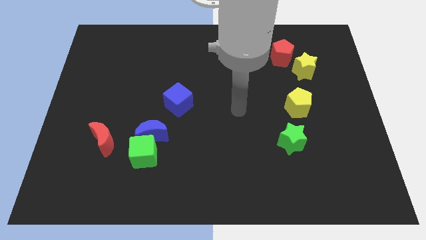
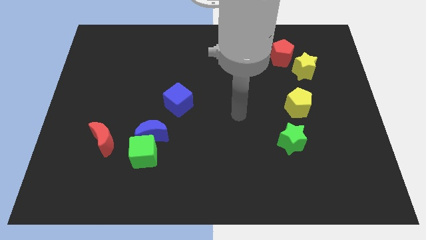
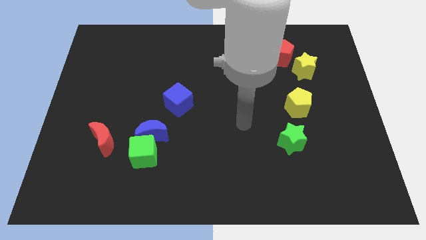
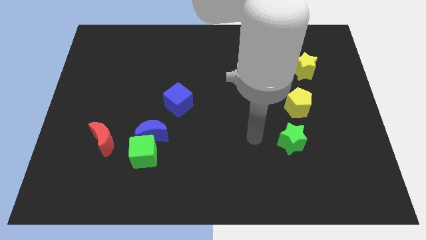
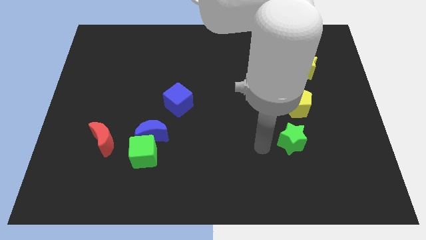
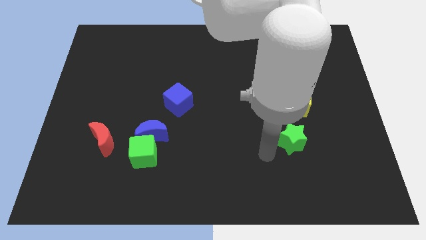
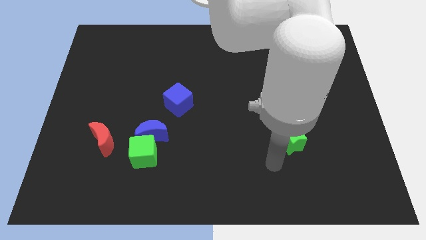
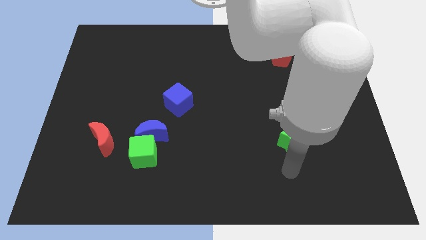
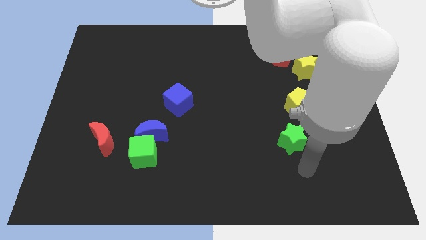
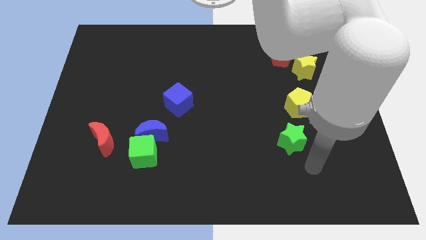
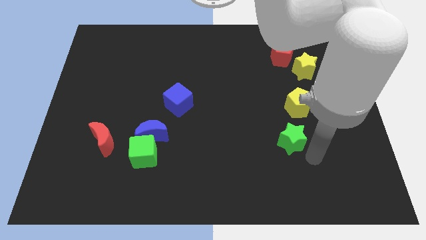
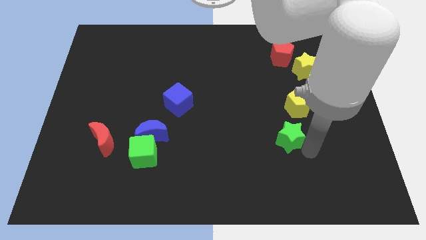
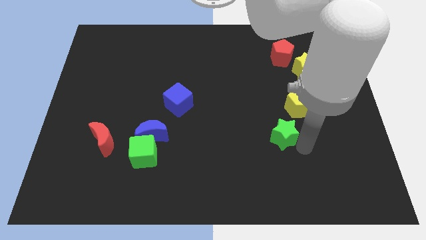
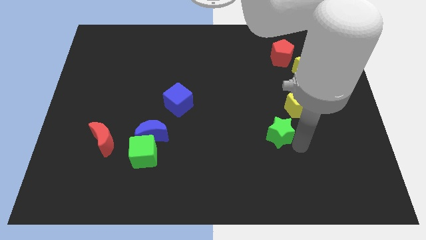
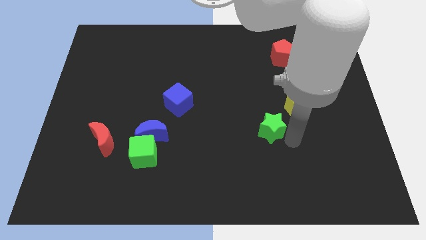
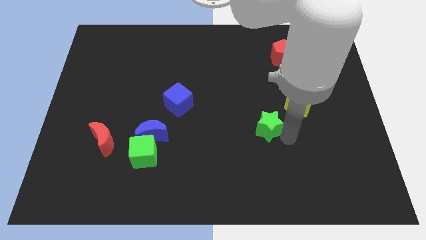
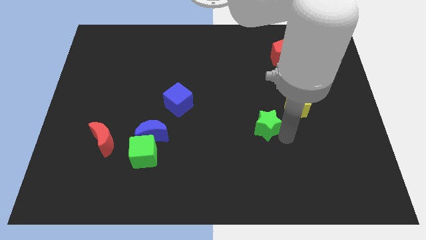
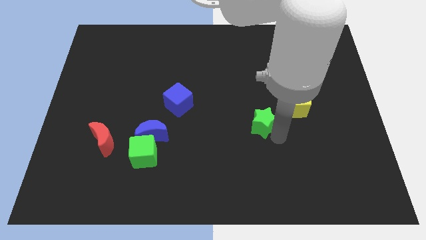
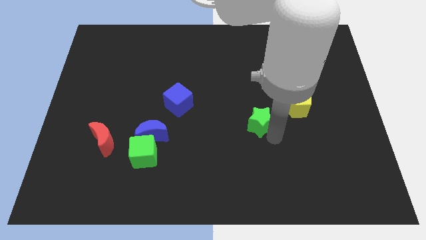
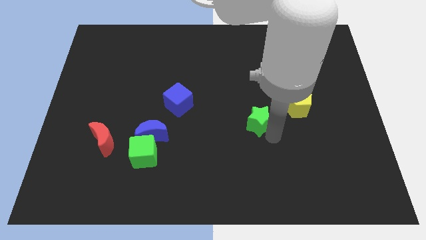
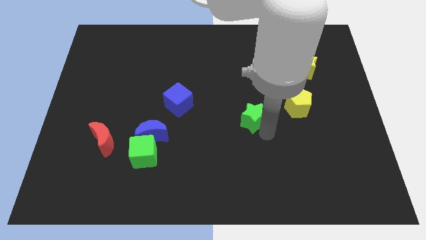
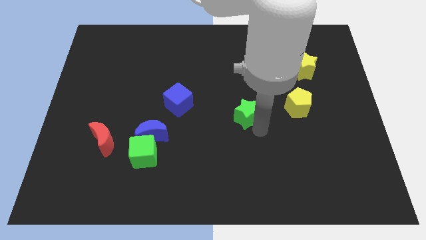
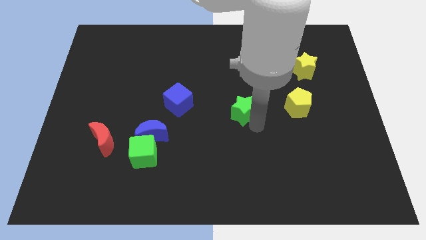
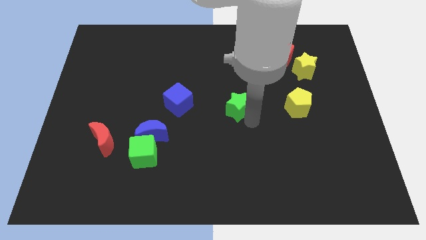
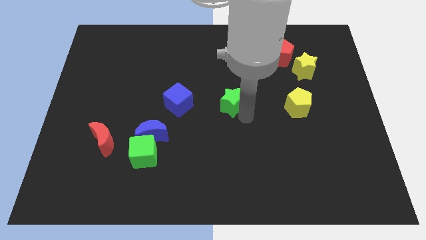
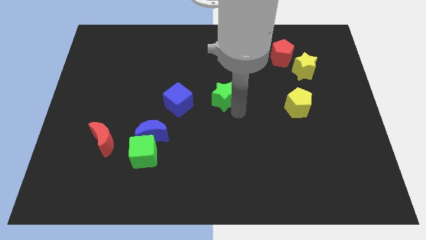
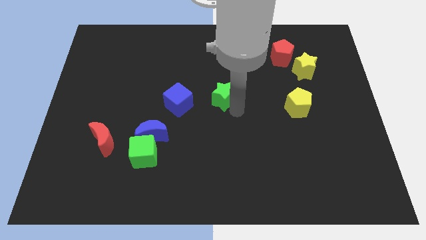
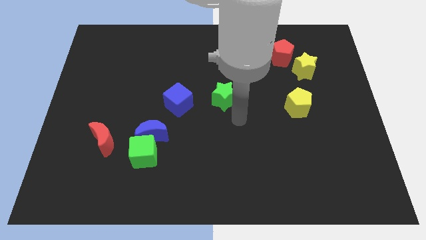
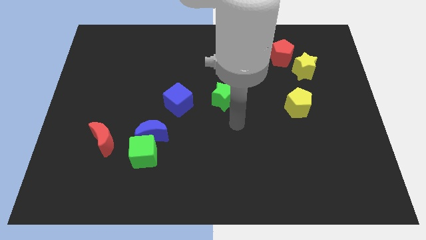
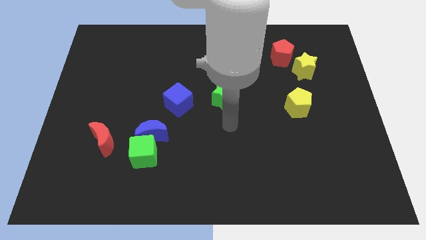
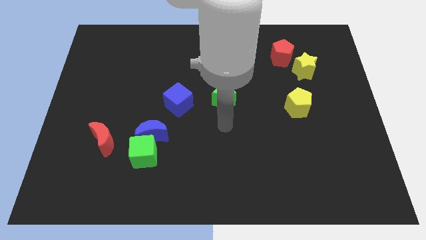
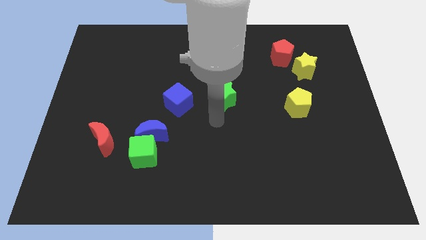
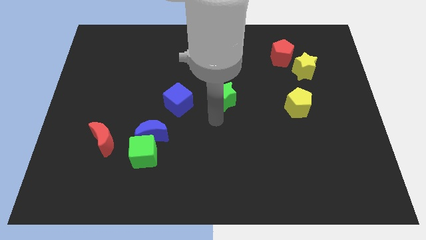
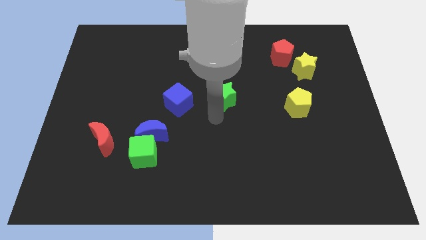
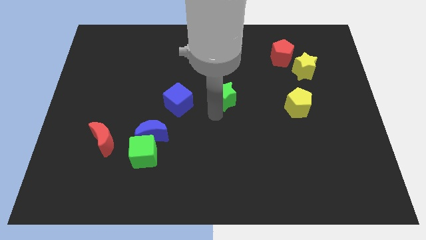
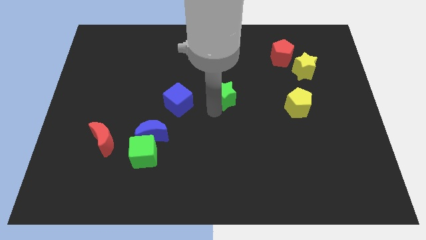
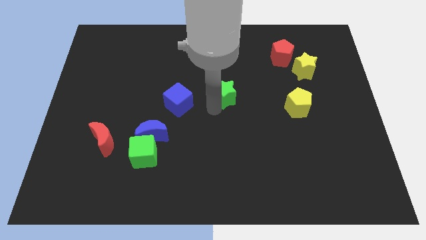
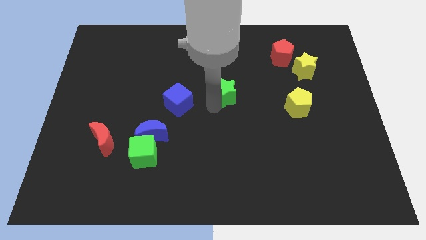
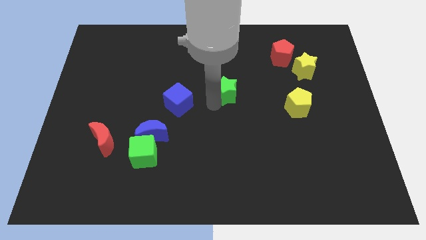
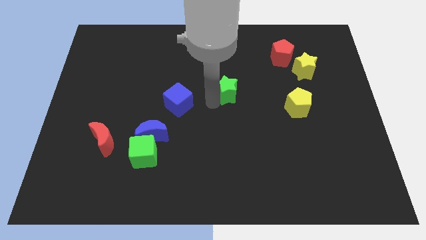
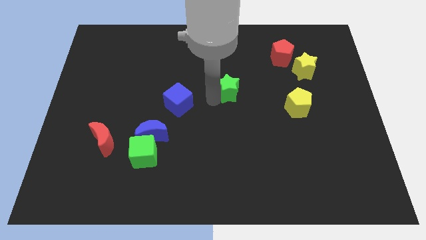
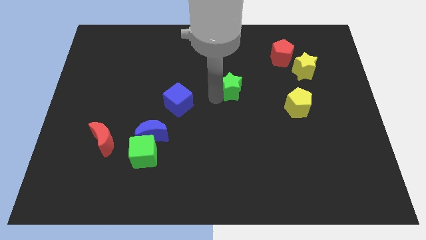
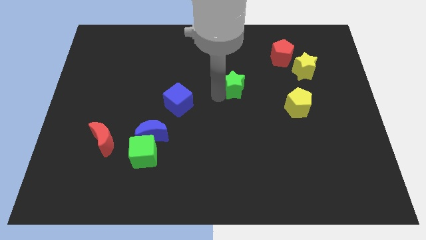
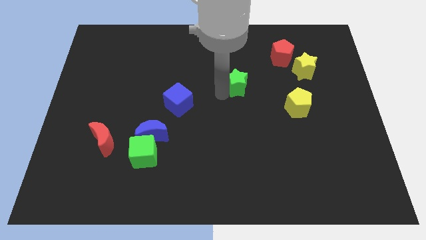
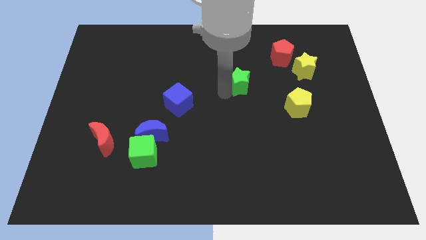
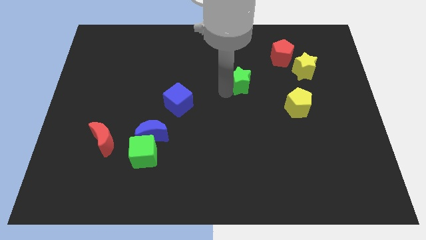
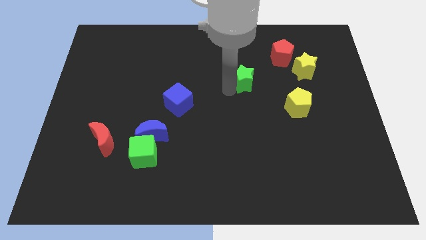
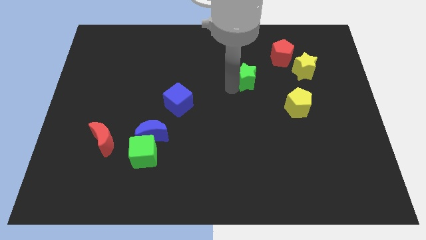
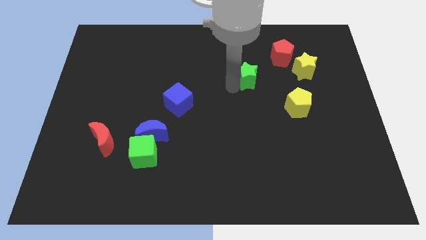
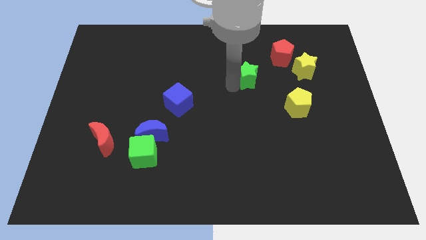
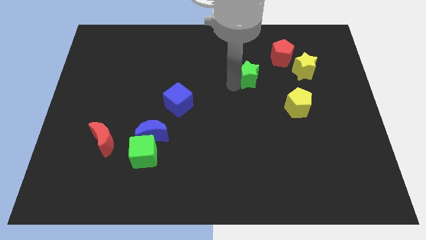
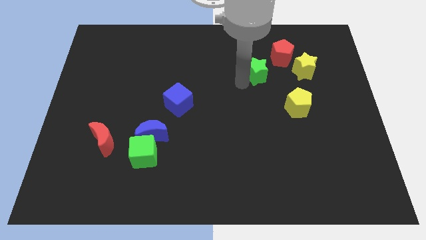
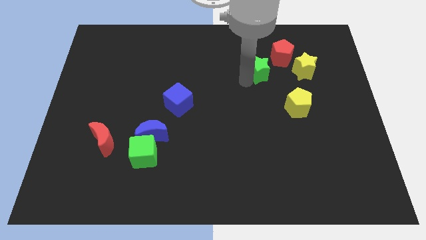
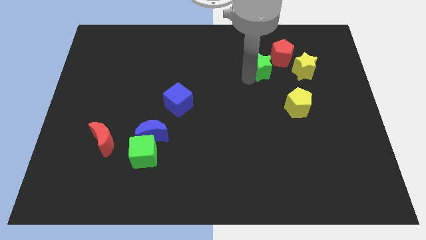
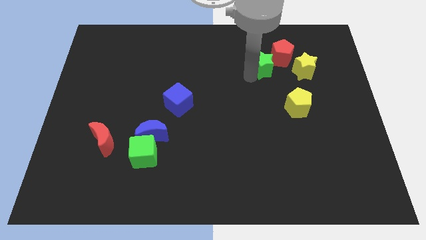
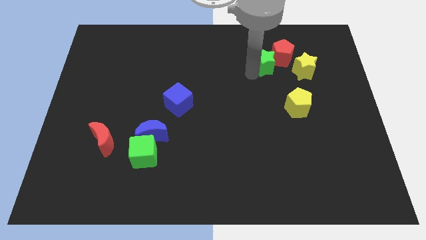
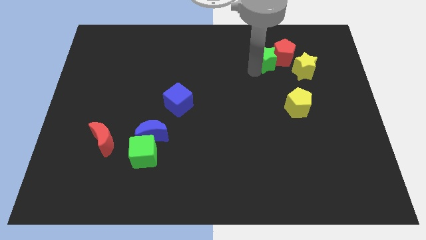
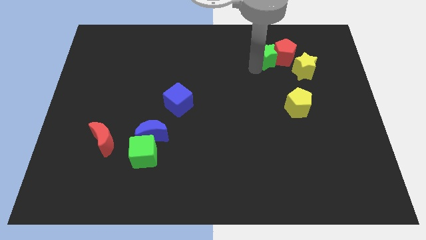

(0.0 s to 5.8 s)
slide the green star next to the red pentagon

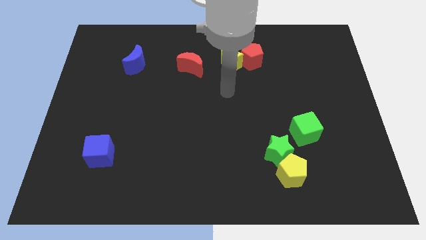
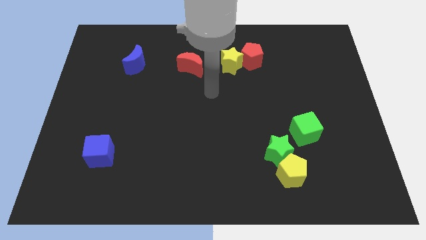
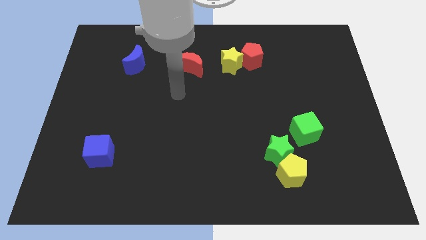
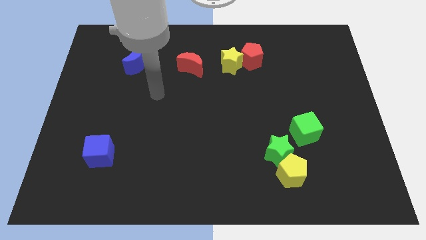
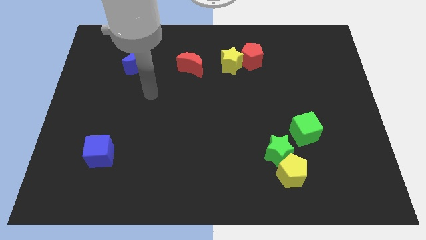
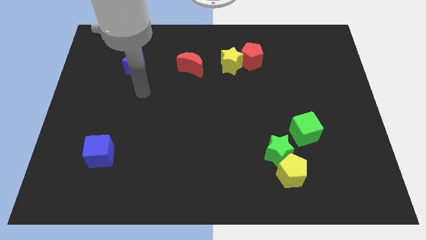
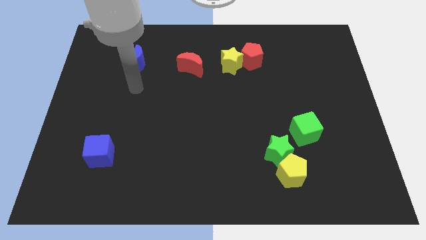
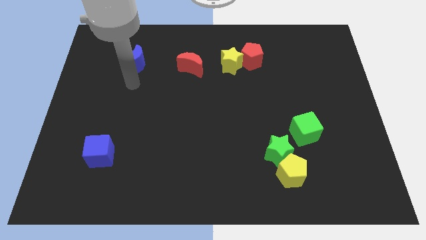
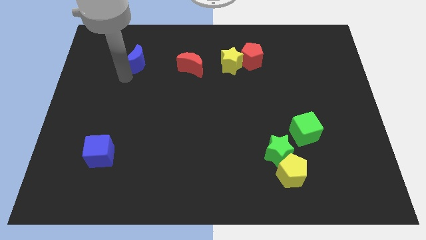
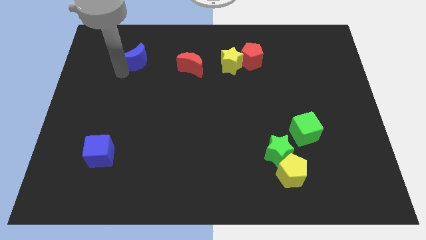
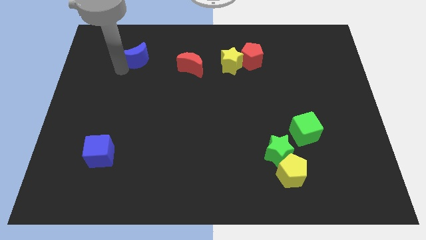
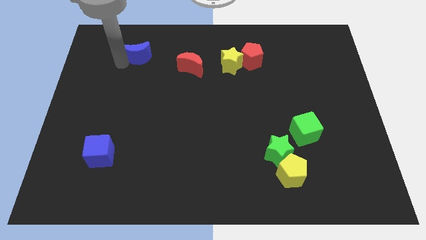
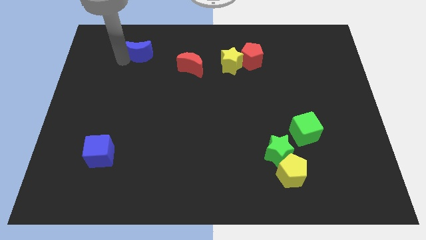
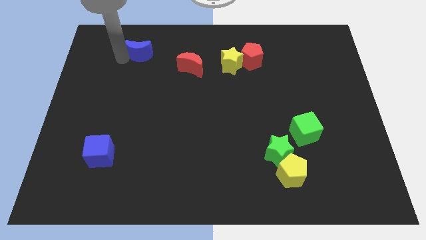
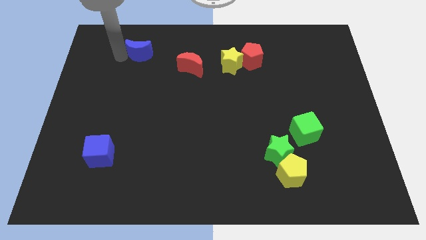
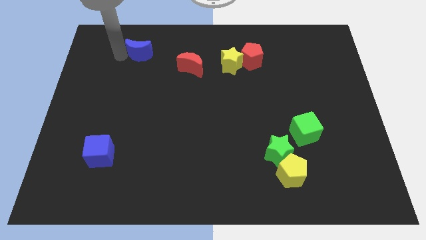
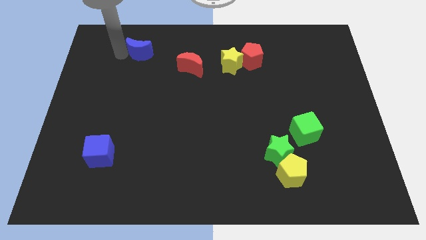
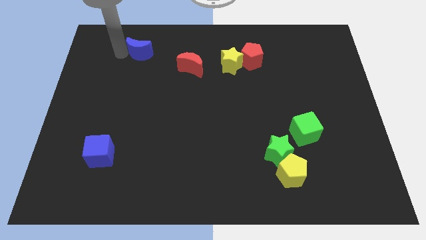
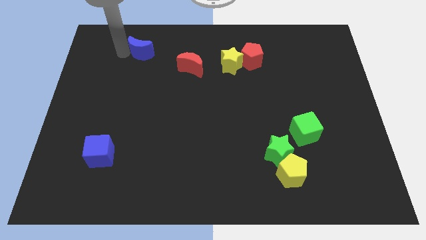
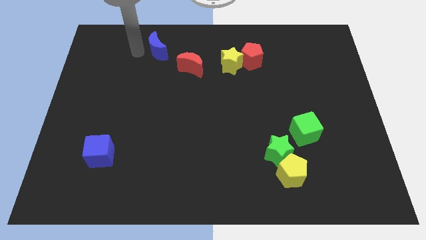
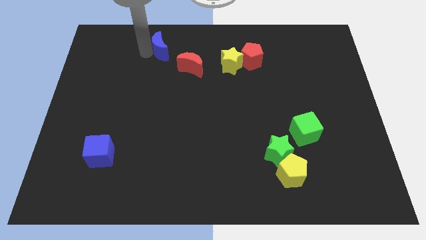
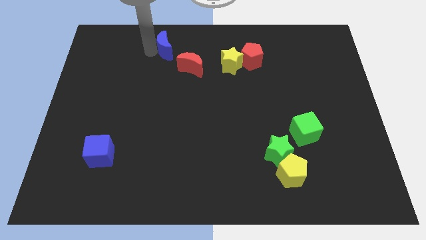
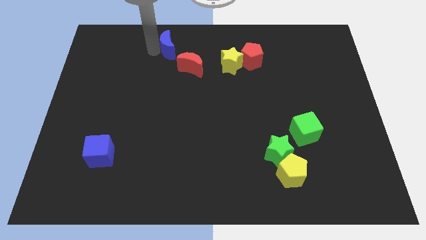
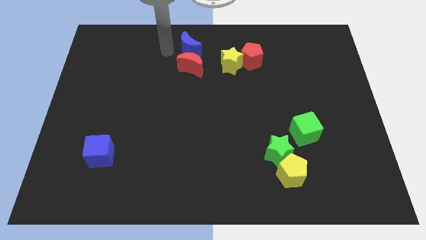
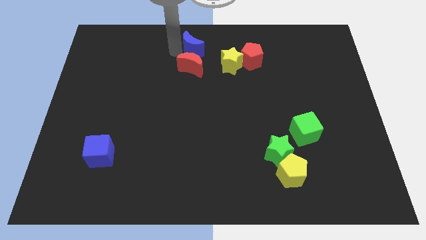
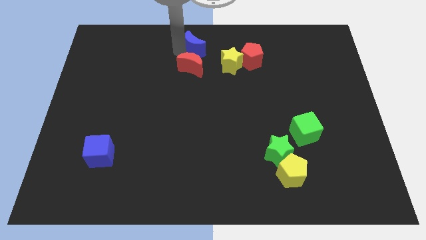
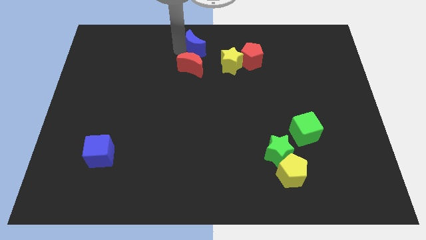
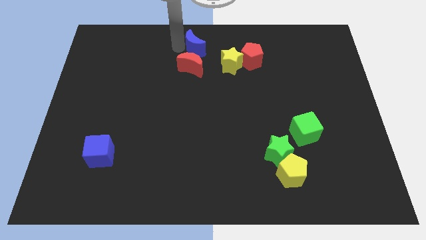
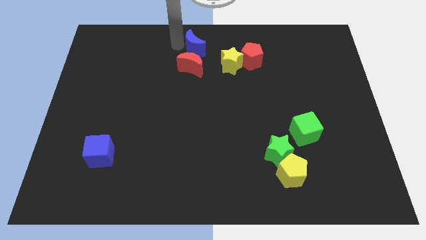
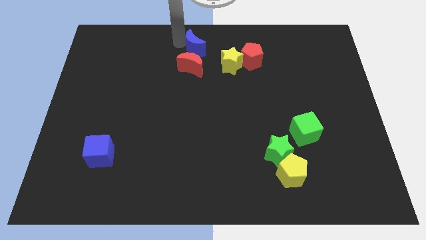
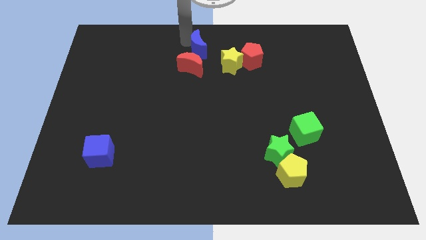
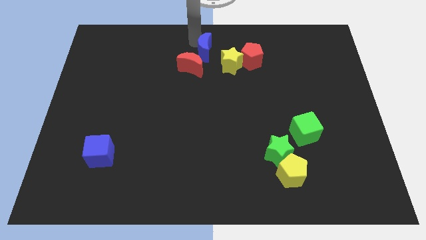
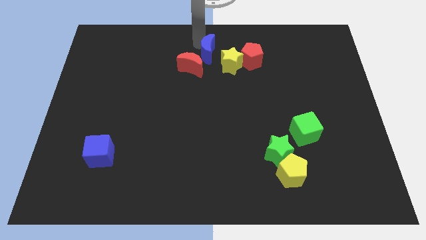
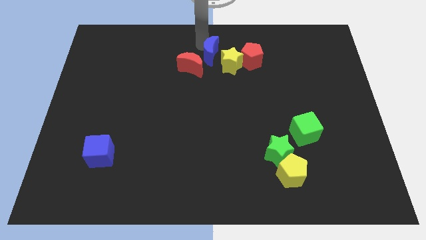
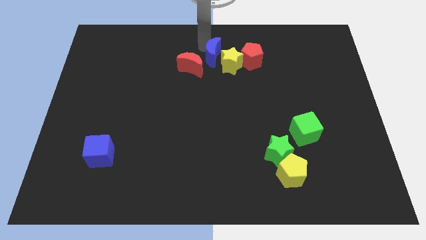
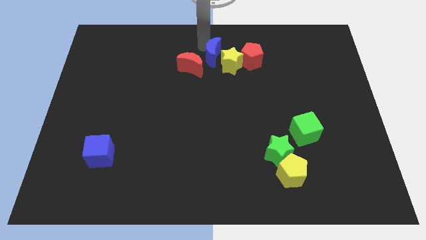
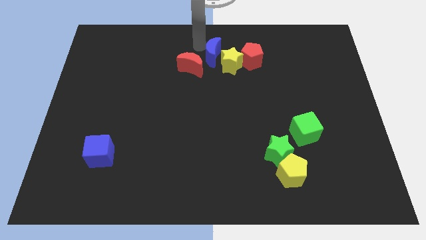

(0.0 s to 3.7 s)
move the blue moon to the yellow star
